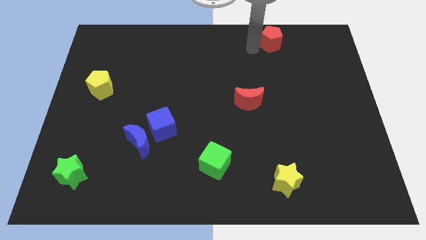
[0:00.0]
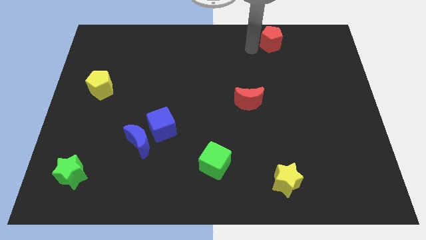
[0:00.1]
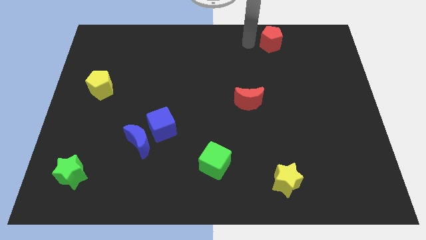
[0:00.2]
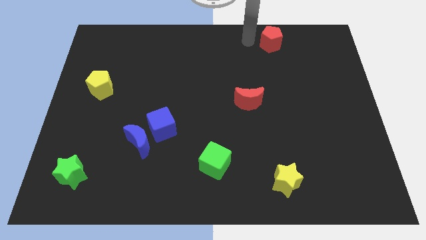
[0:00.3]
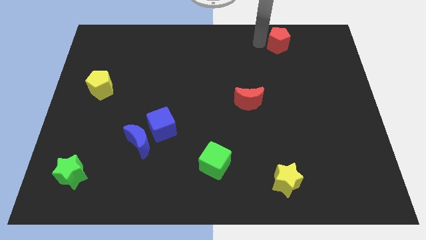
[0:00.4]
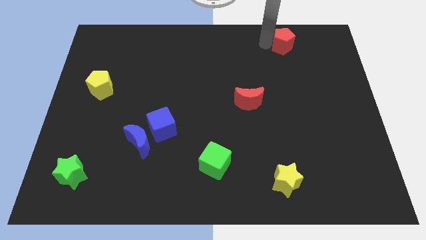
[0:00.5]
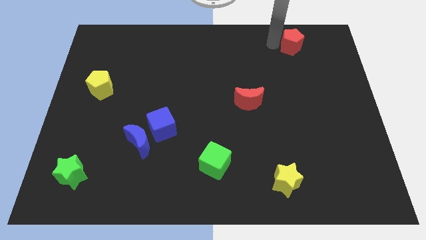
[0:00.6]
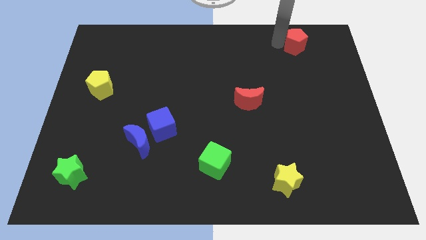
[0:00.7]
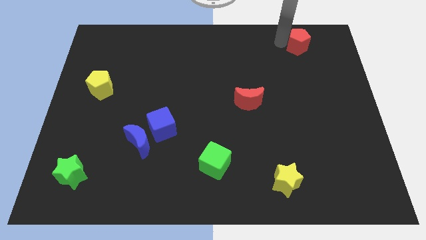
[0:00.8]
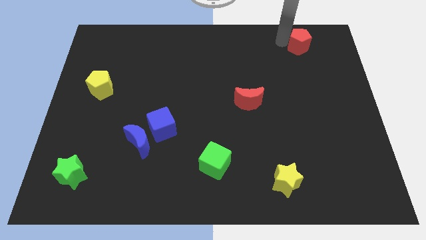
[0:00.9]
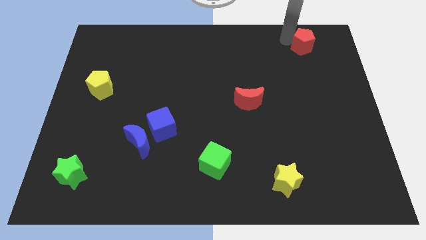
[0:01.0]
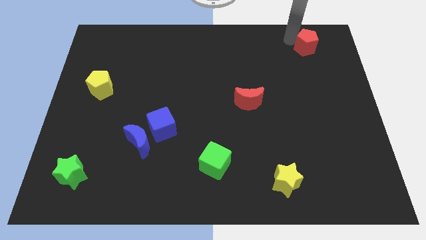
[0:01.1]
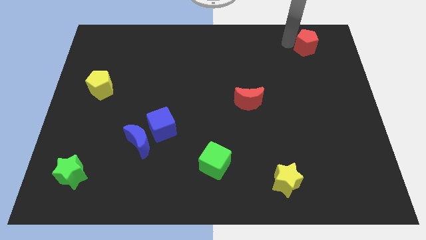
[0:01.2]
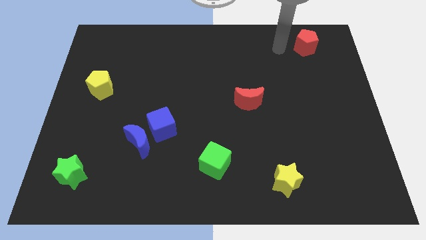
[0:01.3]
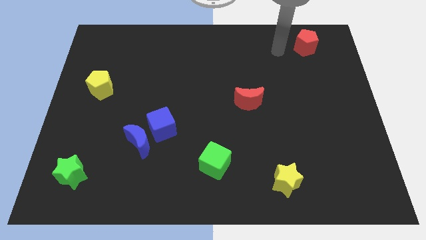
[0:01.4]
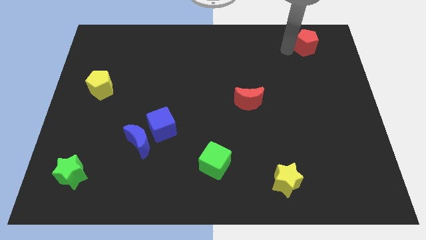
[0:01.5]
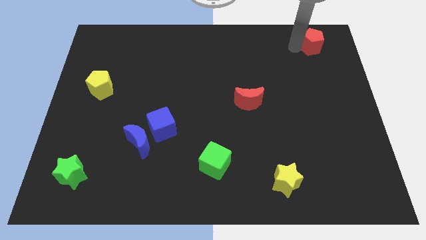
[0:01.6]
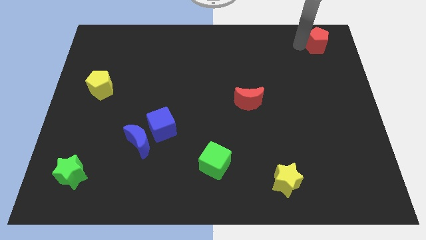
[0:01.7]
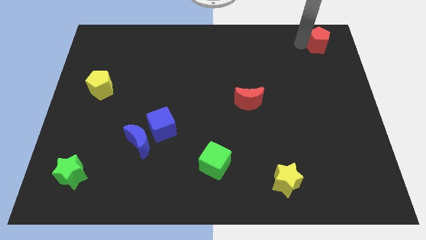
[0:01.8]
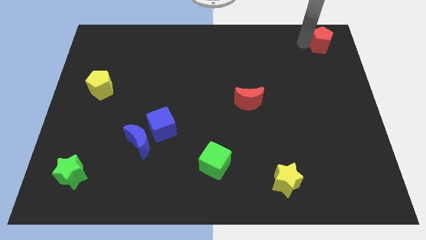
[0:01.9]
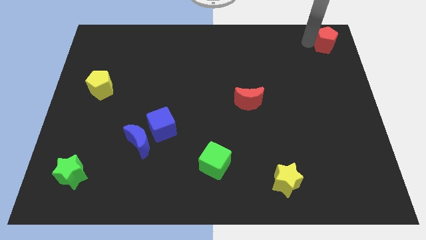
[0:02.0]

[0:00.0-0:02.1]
place the red pentagon diagonally above the yellow star

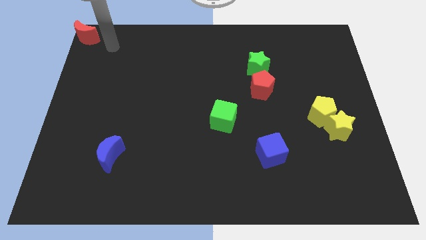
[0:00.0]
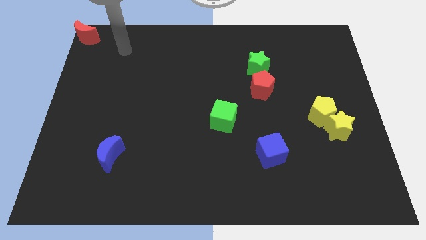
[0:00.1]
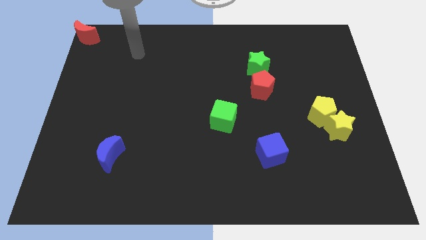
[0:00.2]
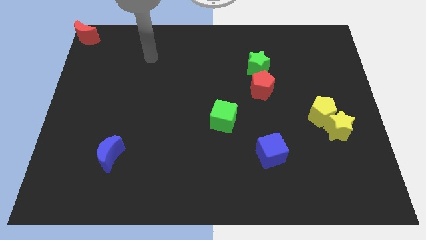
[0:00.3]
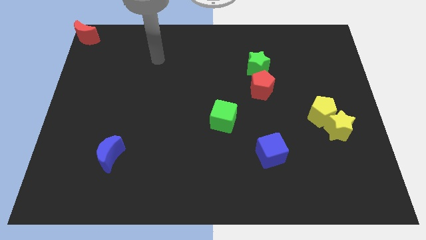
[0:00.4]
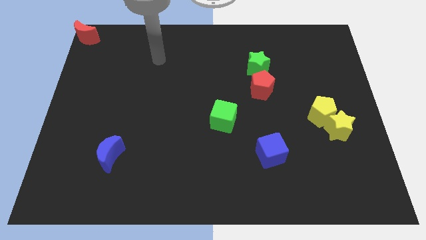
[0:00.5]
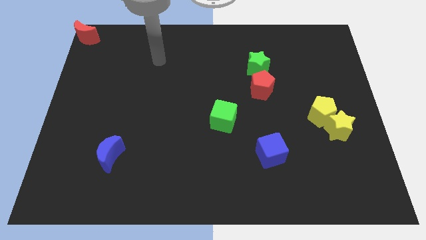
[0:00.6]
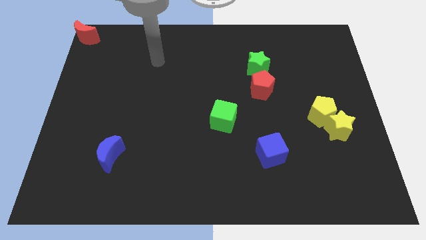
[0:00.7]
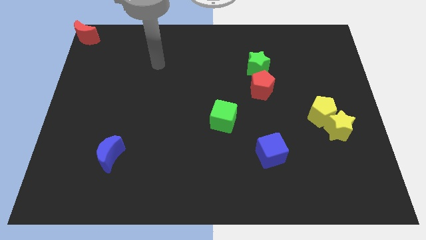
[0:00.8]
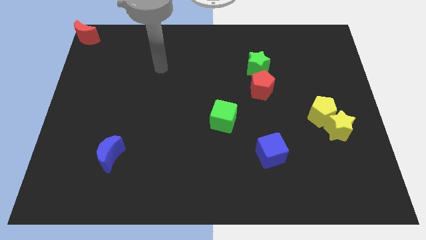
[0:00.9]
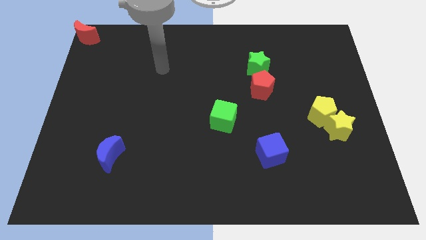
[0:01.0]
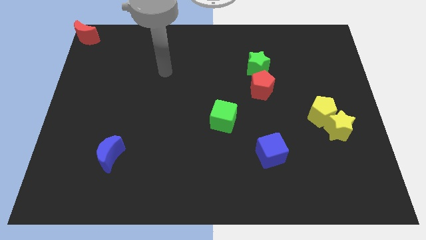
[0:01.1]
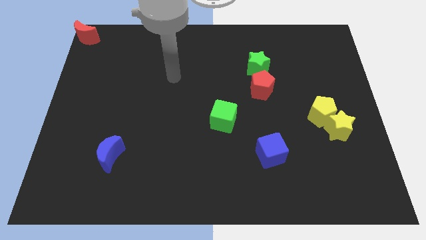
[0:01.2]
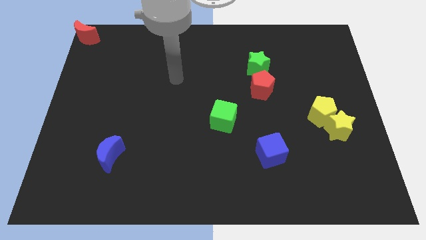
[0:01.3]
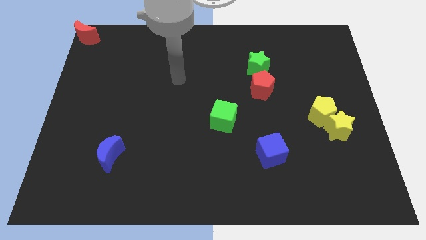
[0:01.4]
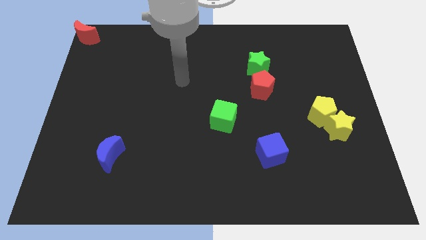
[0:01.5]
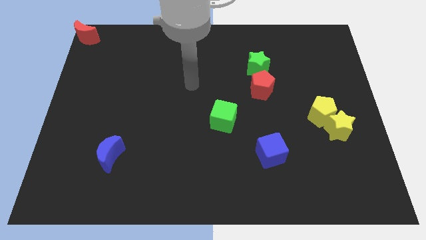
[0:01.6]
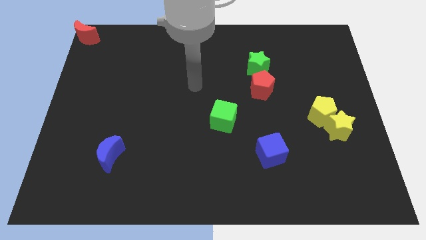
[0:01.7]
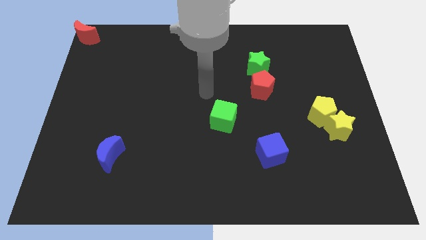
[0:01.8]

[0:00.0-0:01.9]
move your hand away from the red crescent

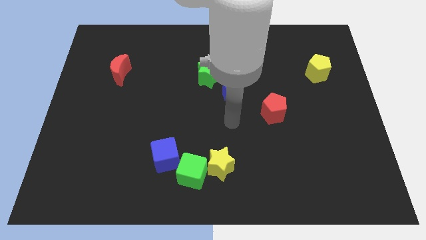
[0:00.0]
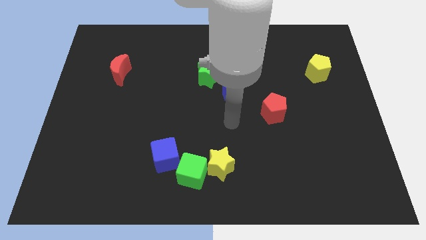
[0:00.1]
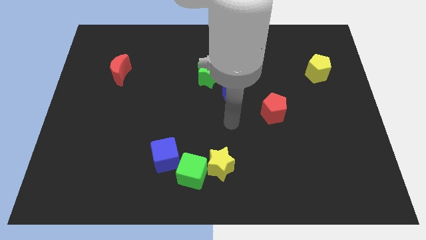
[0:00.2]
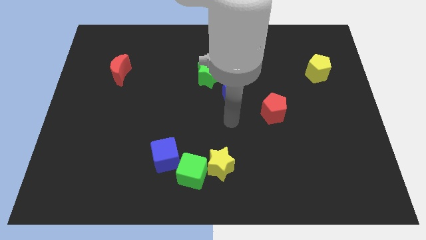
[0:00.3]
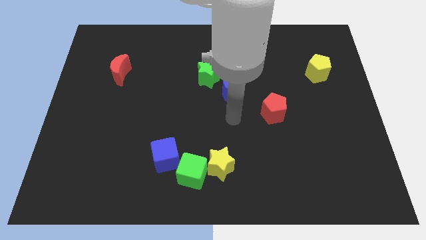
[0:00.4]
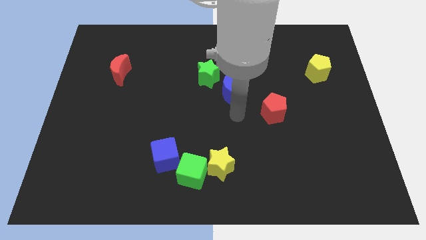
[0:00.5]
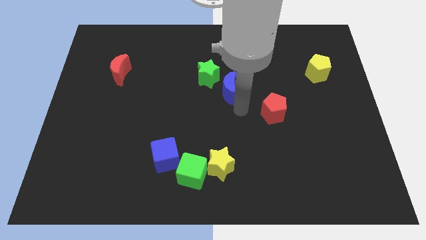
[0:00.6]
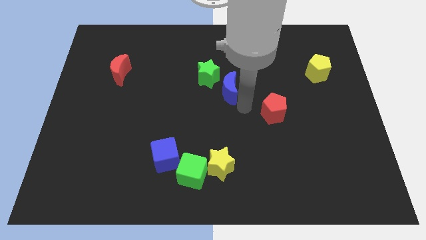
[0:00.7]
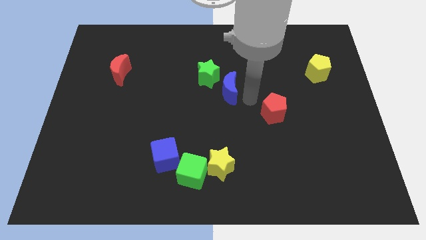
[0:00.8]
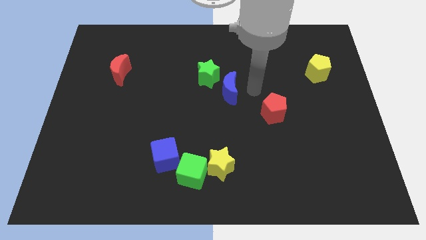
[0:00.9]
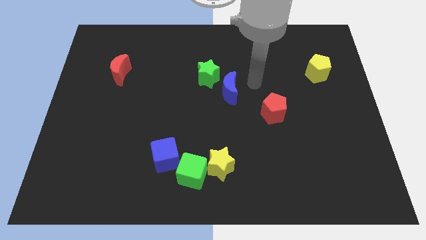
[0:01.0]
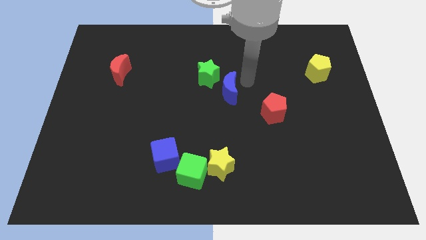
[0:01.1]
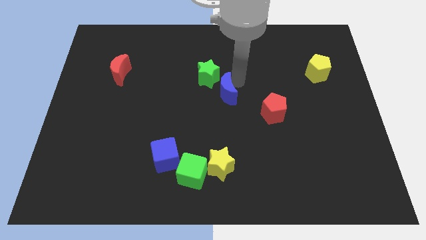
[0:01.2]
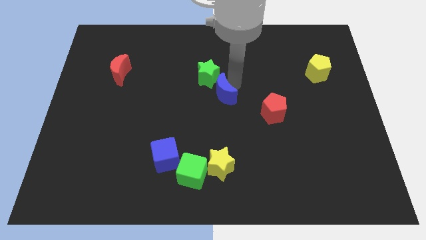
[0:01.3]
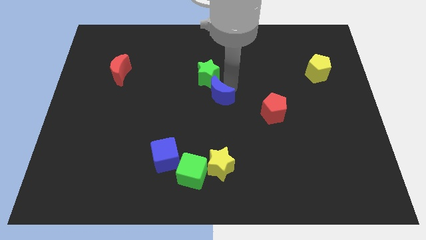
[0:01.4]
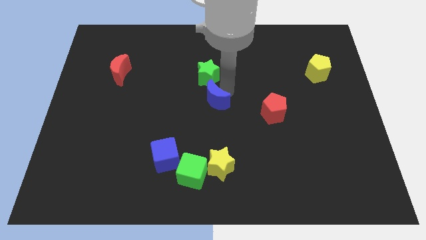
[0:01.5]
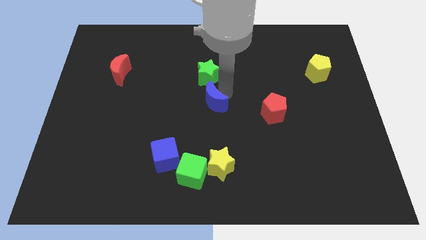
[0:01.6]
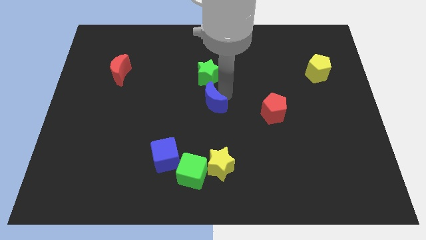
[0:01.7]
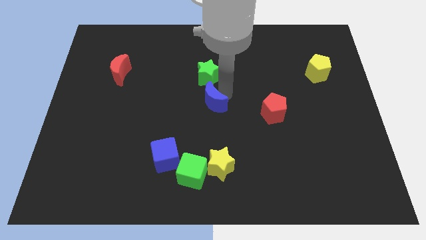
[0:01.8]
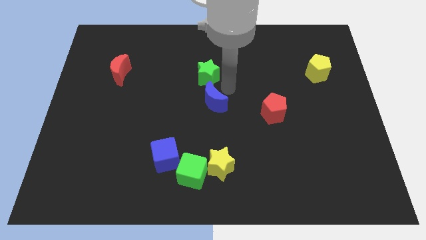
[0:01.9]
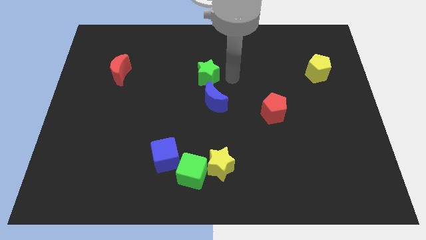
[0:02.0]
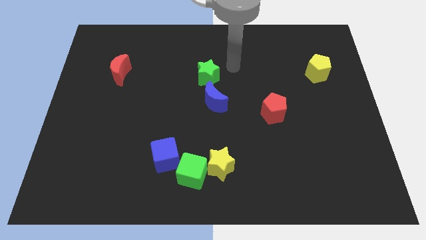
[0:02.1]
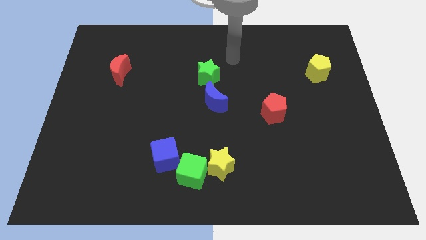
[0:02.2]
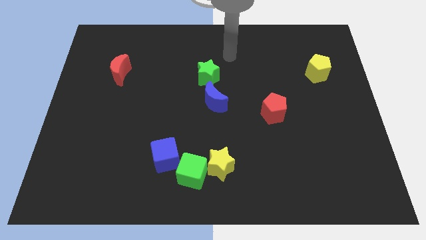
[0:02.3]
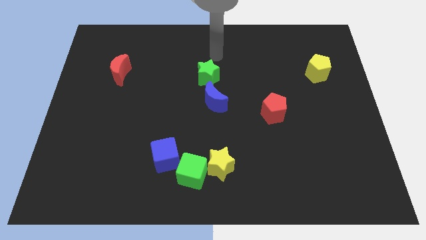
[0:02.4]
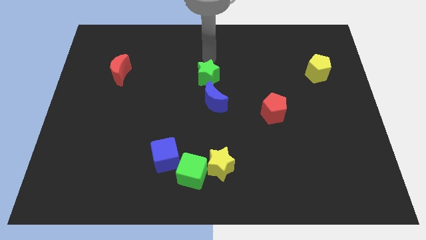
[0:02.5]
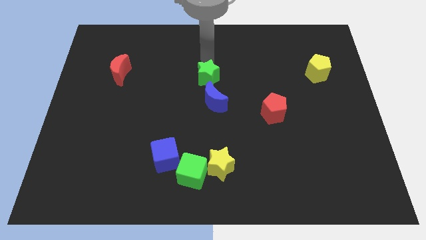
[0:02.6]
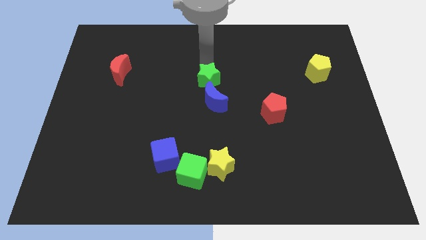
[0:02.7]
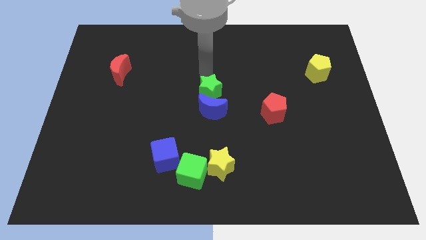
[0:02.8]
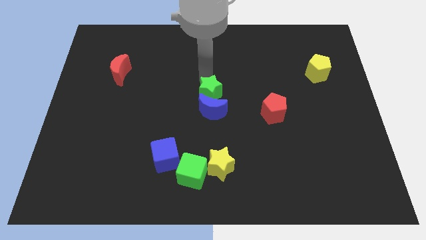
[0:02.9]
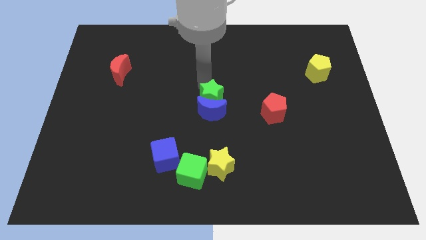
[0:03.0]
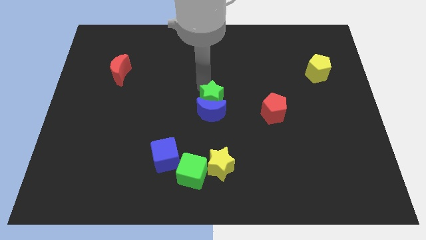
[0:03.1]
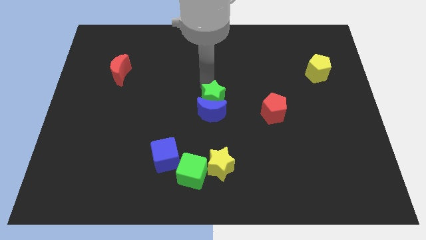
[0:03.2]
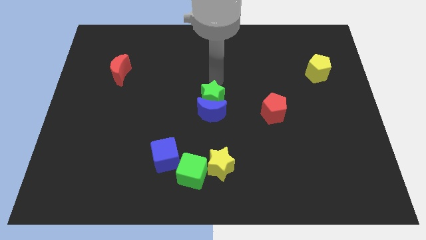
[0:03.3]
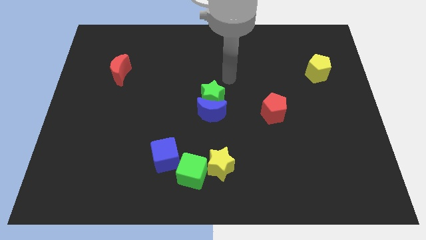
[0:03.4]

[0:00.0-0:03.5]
push green star towards blue moon

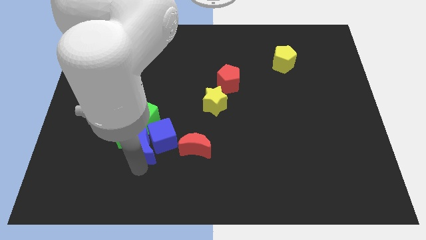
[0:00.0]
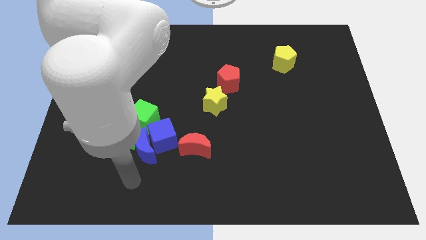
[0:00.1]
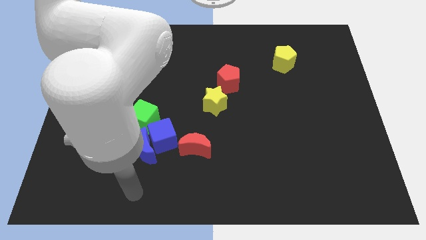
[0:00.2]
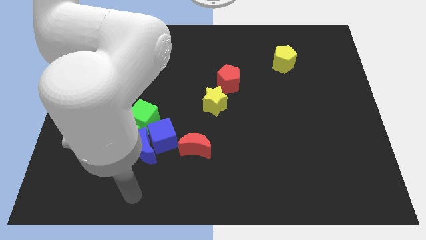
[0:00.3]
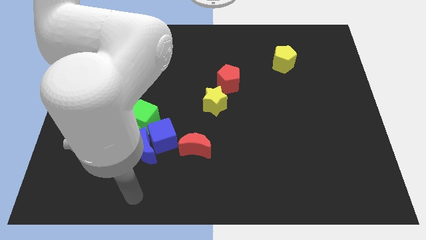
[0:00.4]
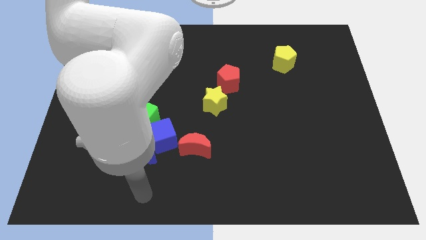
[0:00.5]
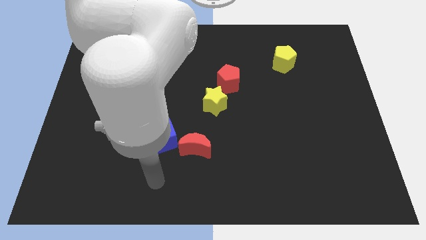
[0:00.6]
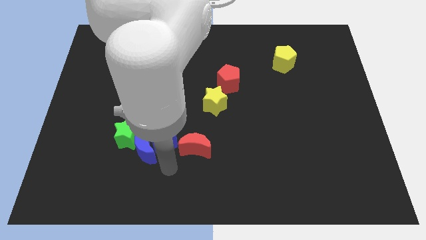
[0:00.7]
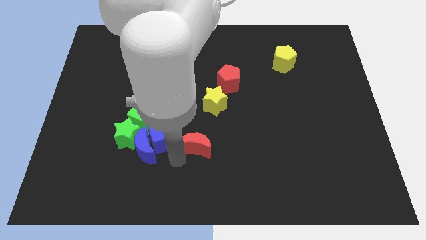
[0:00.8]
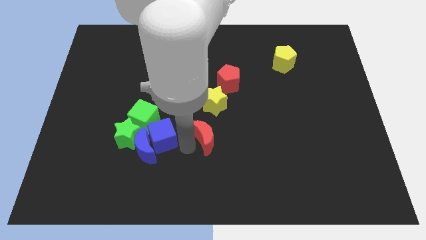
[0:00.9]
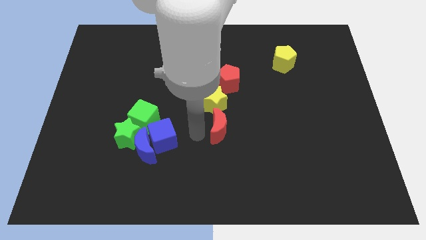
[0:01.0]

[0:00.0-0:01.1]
push red moon away from the blue cube

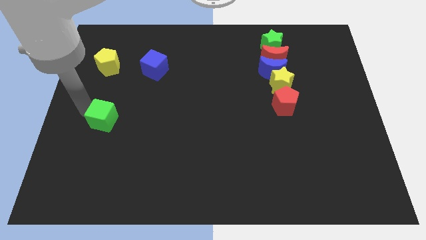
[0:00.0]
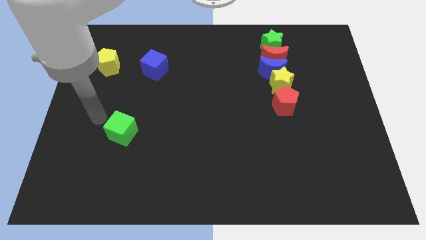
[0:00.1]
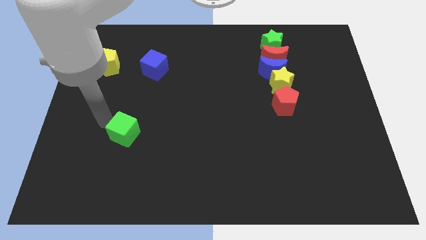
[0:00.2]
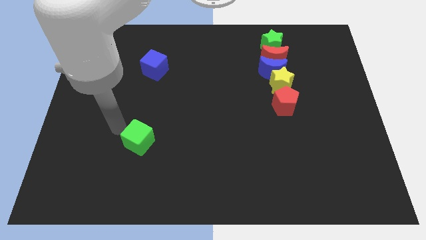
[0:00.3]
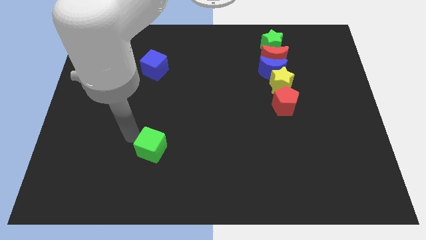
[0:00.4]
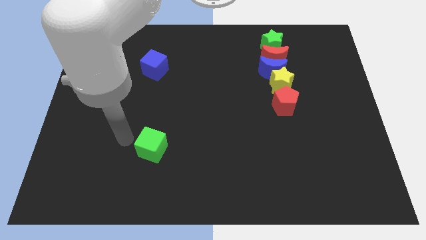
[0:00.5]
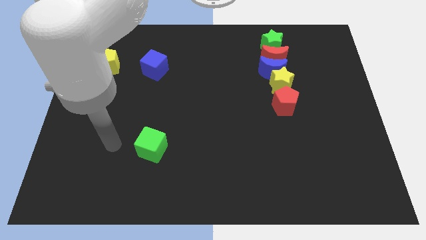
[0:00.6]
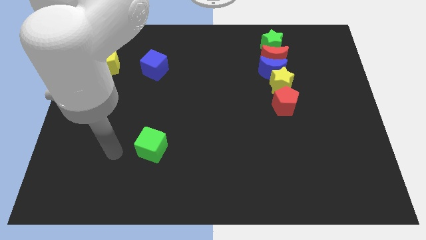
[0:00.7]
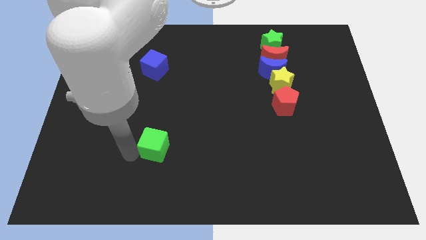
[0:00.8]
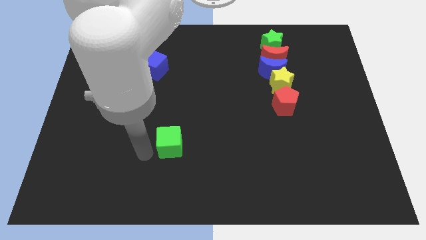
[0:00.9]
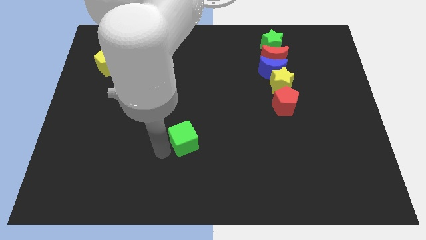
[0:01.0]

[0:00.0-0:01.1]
push the green cube to the right of the board
